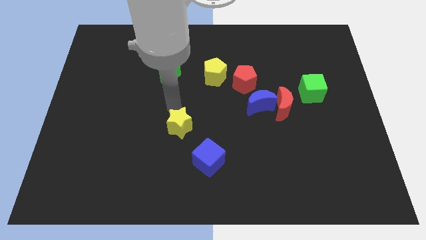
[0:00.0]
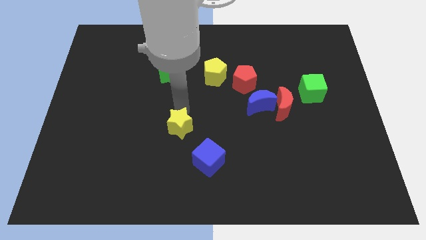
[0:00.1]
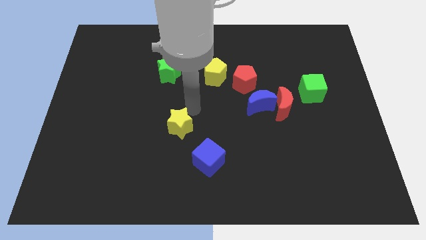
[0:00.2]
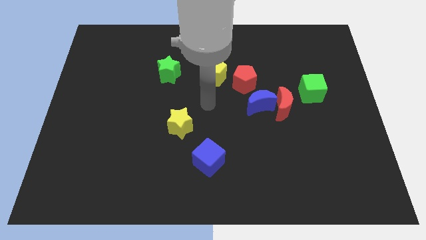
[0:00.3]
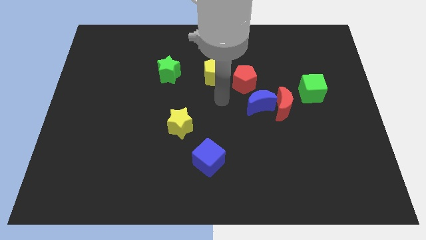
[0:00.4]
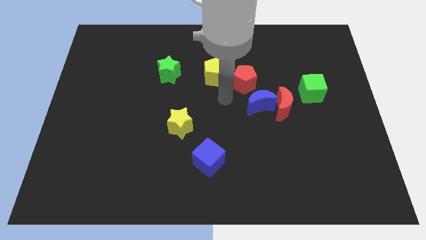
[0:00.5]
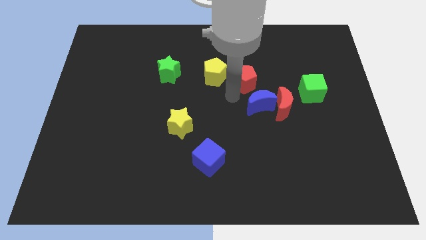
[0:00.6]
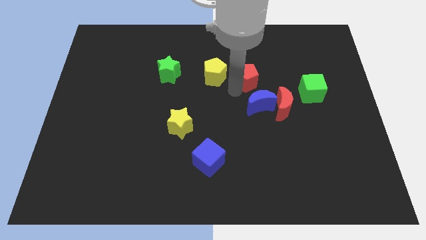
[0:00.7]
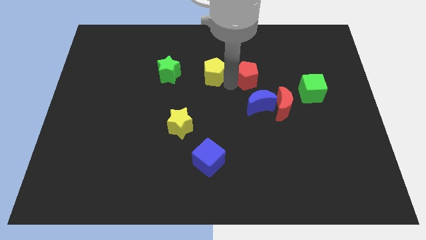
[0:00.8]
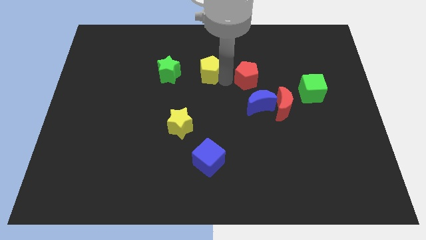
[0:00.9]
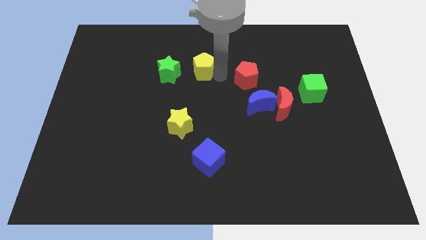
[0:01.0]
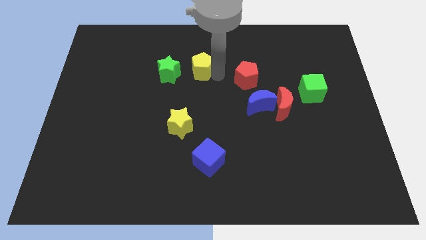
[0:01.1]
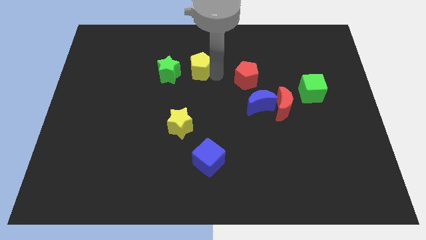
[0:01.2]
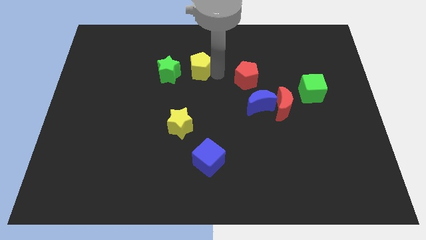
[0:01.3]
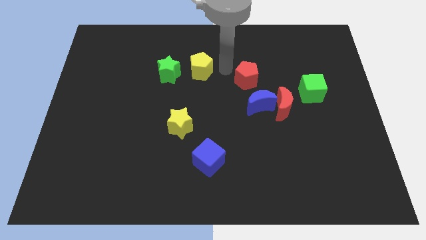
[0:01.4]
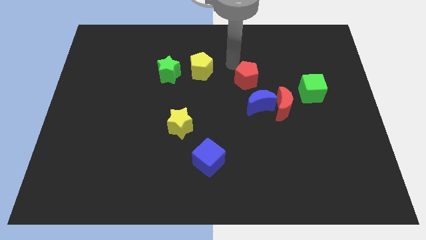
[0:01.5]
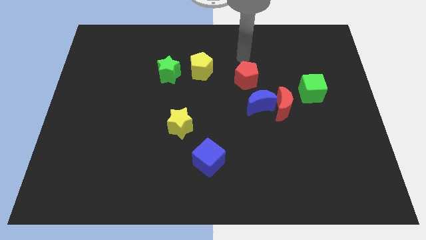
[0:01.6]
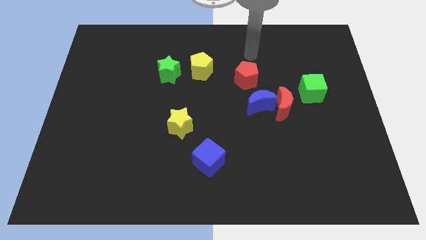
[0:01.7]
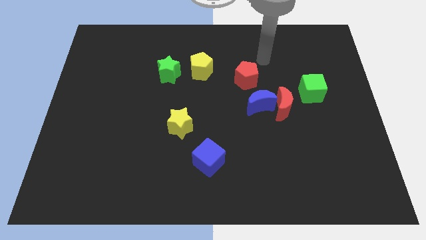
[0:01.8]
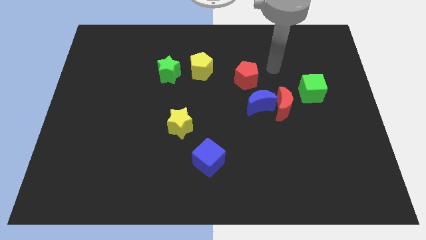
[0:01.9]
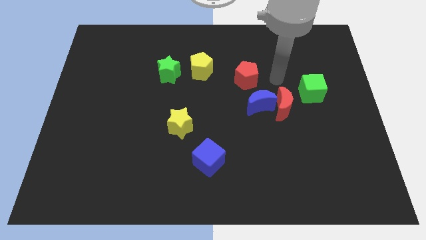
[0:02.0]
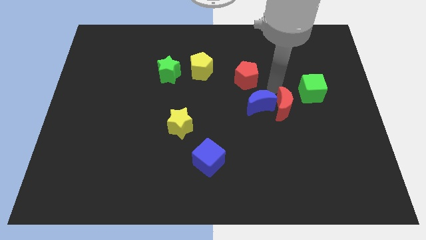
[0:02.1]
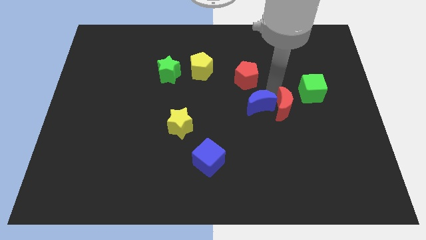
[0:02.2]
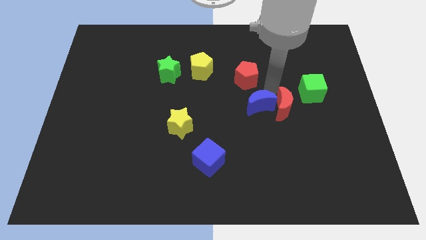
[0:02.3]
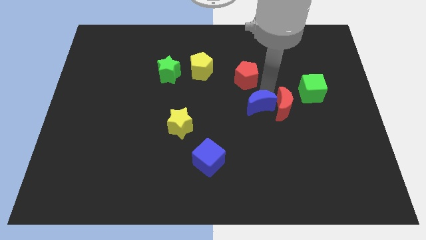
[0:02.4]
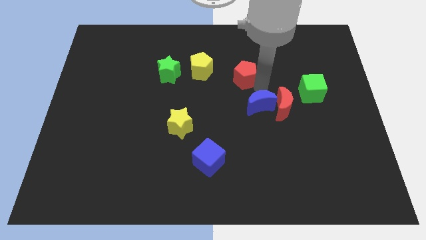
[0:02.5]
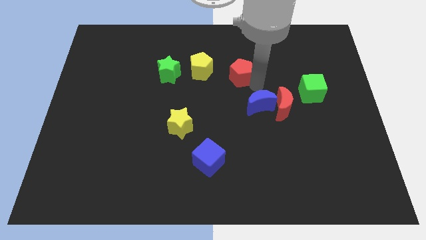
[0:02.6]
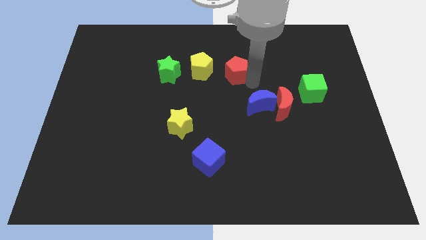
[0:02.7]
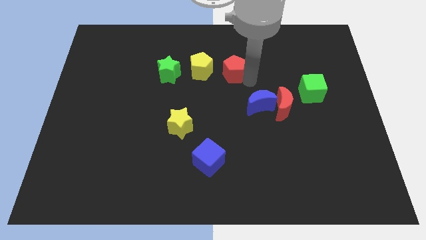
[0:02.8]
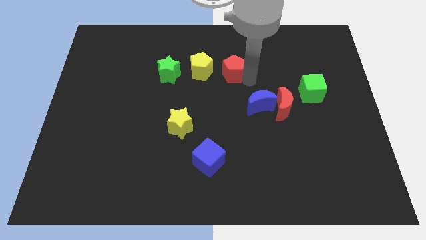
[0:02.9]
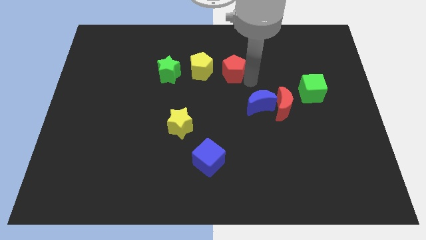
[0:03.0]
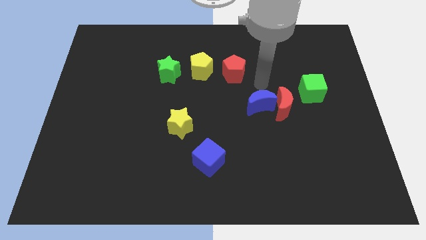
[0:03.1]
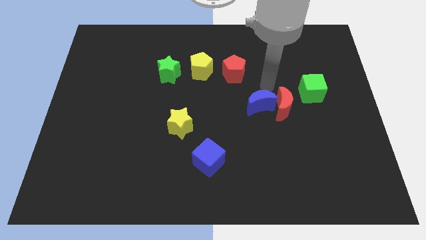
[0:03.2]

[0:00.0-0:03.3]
push the yellow pentagon and red pentagon to the right of green star

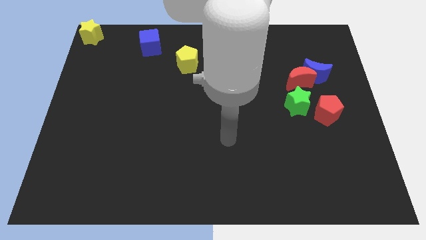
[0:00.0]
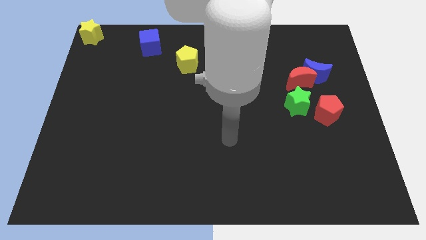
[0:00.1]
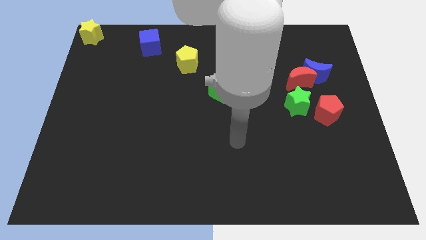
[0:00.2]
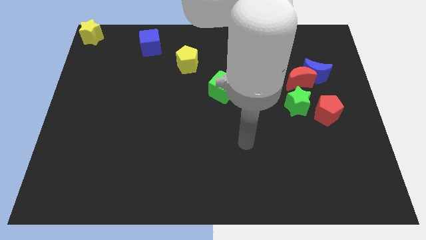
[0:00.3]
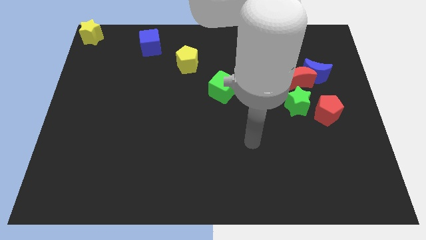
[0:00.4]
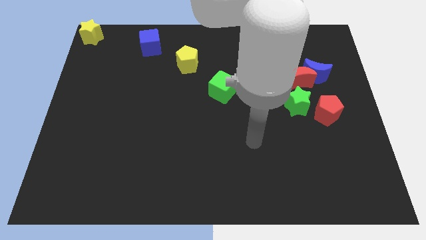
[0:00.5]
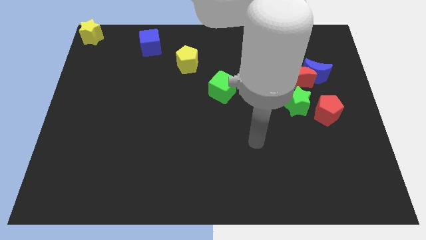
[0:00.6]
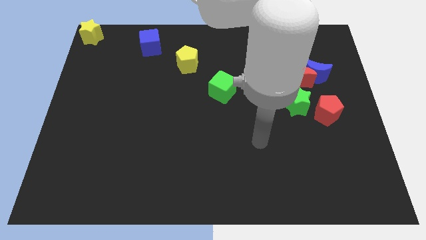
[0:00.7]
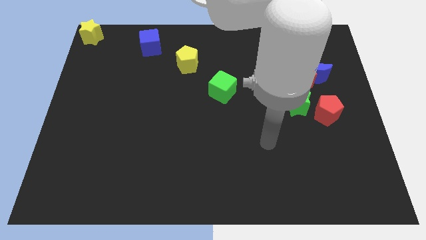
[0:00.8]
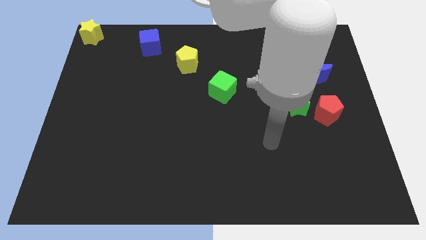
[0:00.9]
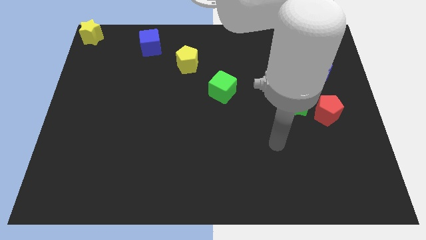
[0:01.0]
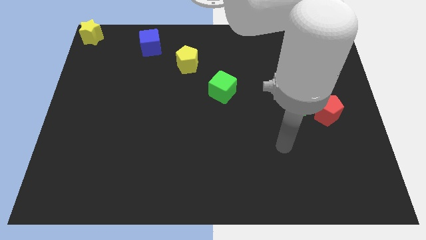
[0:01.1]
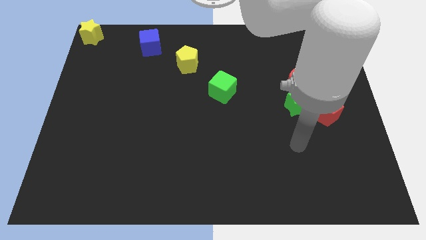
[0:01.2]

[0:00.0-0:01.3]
place your arm at the bottom of the green star

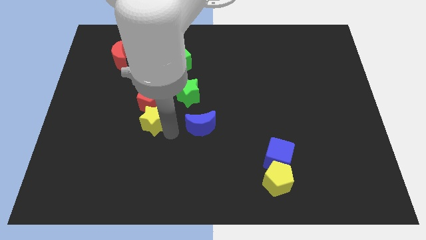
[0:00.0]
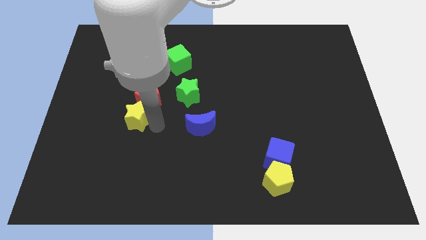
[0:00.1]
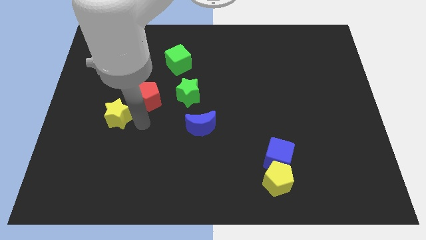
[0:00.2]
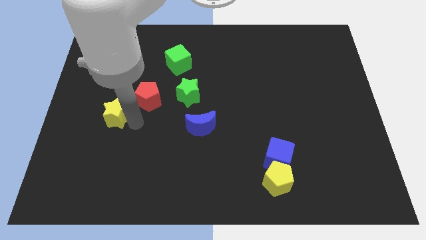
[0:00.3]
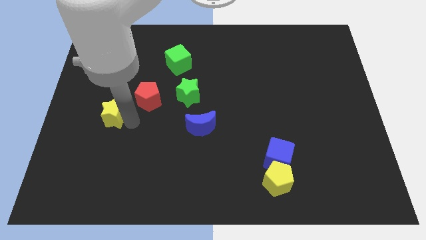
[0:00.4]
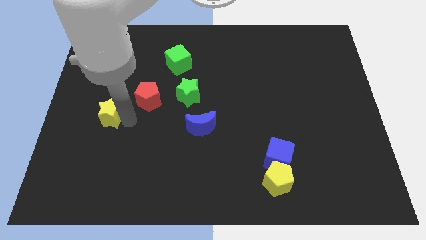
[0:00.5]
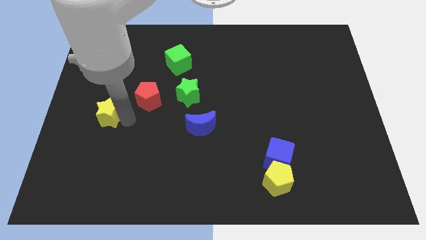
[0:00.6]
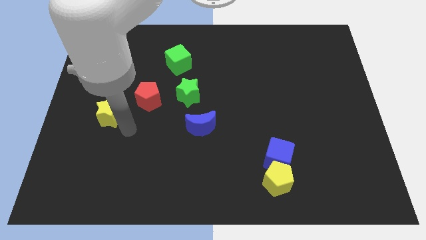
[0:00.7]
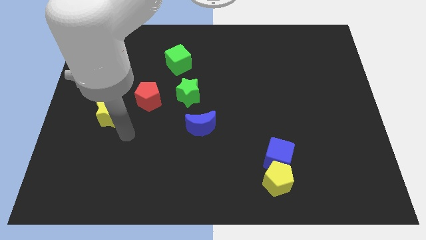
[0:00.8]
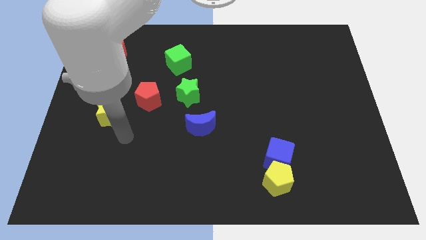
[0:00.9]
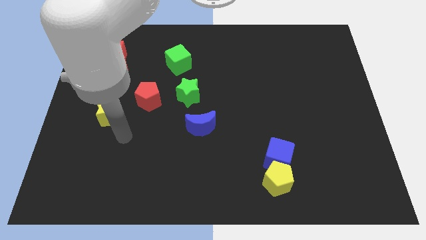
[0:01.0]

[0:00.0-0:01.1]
separate yellow star from red pentagon

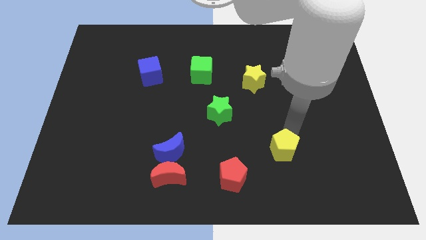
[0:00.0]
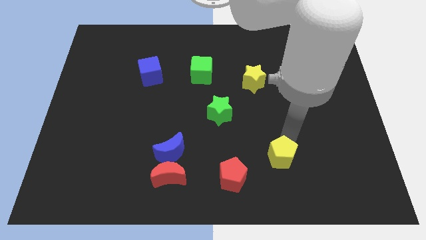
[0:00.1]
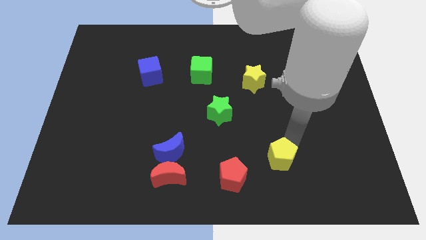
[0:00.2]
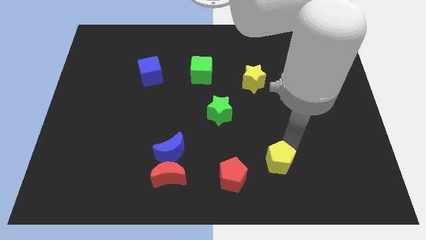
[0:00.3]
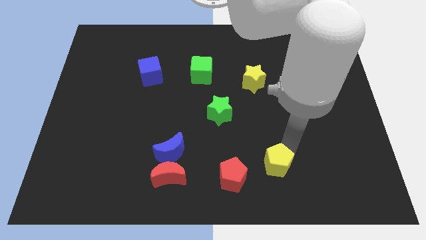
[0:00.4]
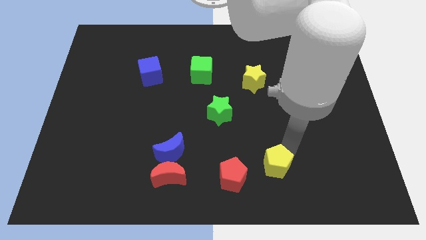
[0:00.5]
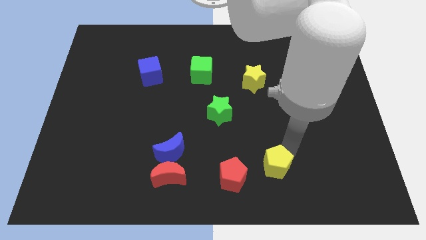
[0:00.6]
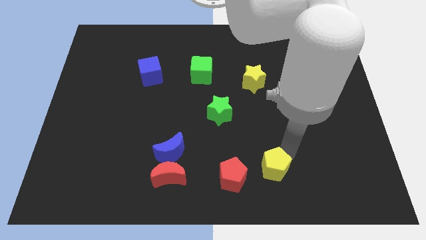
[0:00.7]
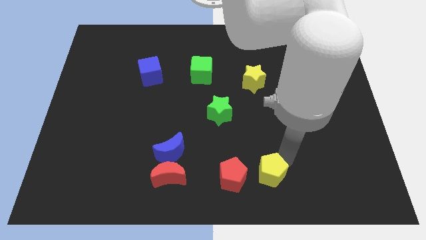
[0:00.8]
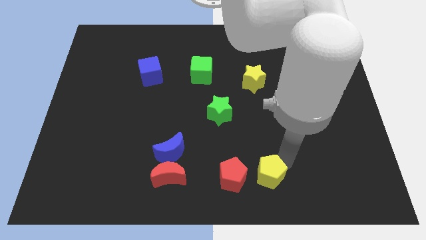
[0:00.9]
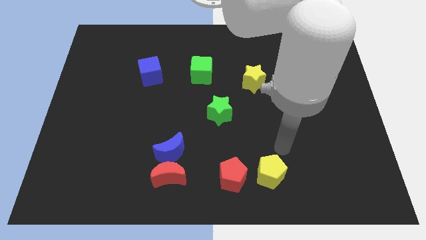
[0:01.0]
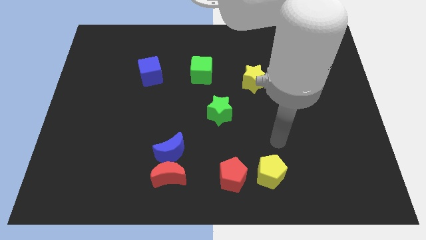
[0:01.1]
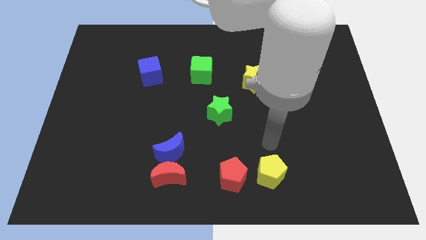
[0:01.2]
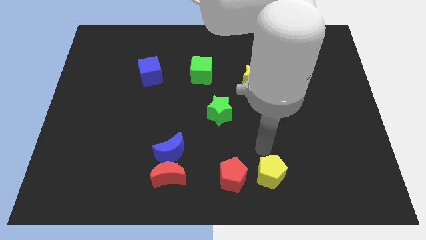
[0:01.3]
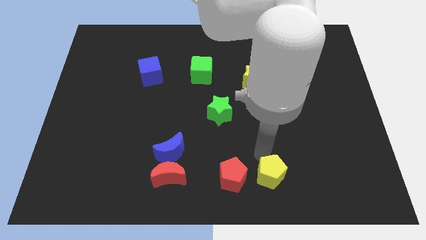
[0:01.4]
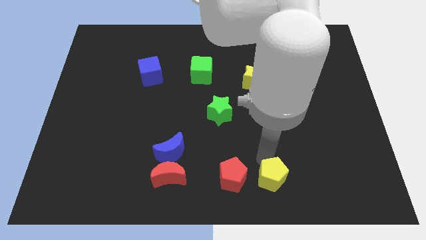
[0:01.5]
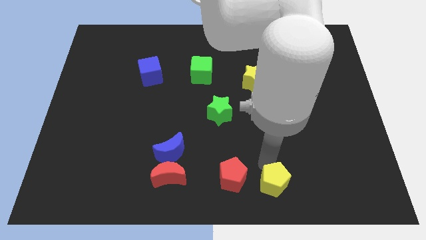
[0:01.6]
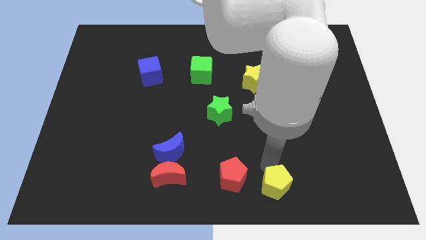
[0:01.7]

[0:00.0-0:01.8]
push the yellow pentagon to the right of the red pentagon

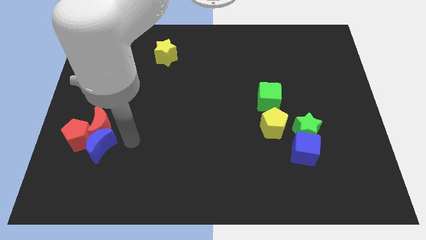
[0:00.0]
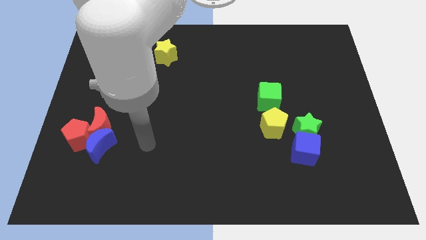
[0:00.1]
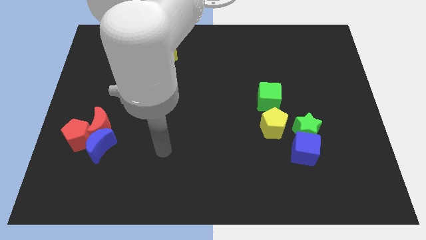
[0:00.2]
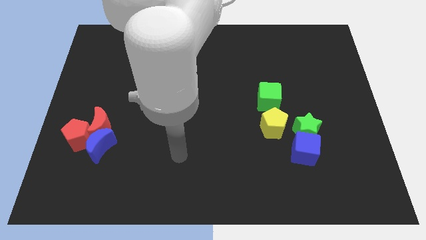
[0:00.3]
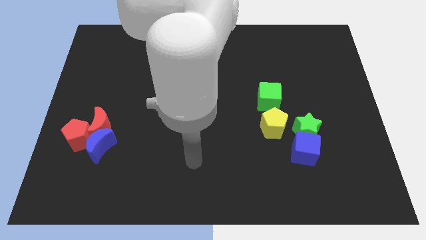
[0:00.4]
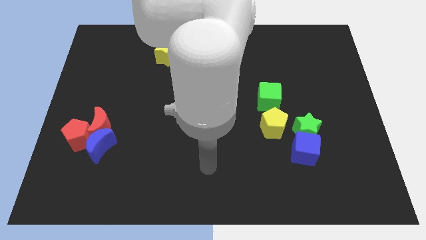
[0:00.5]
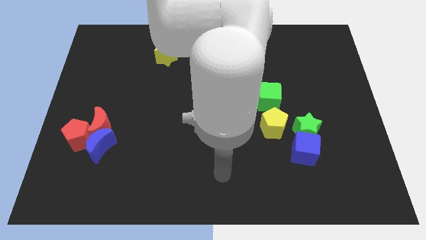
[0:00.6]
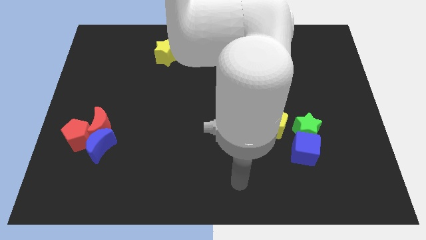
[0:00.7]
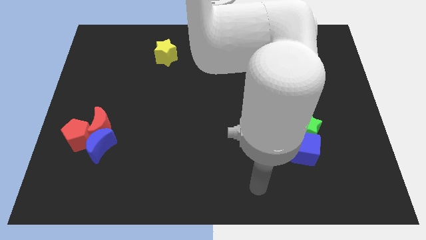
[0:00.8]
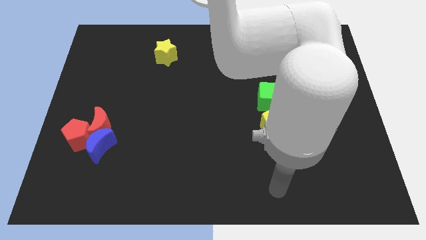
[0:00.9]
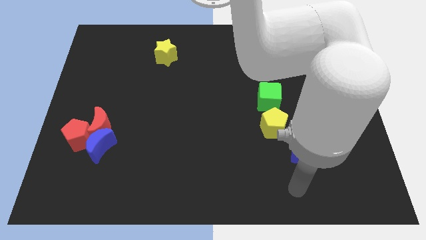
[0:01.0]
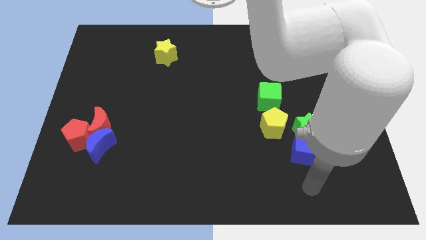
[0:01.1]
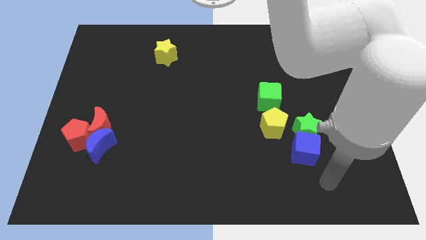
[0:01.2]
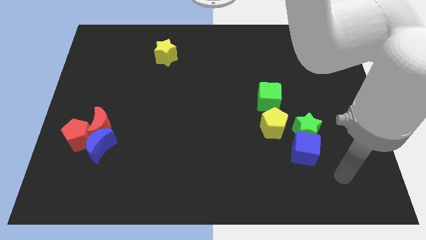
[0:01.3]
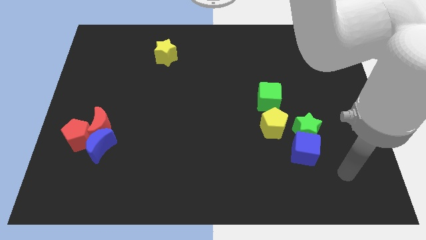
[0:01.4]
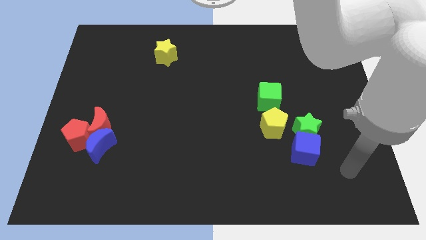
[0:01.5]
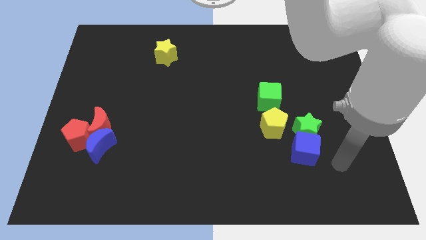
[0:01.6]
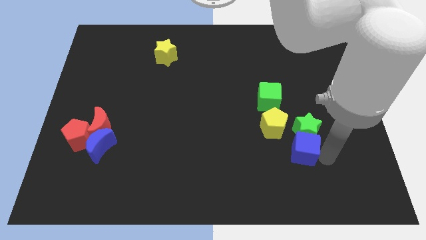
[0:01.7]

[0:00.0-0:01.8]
place your arm at the right of the blue cube
